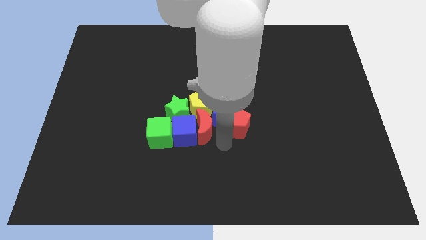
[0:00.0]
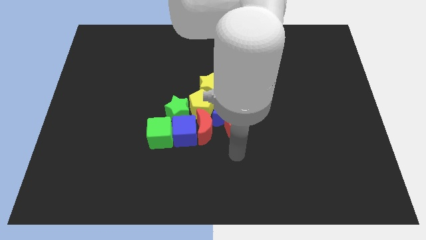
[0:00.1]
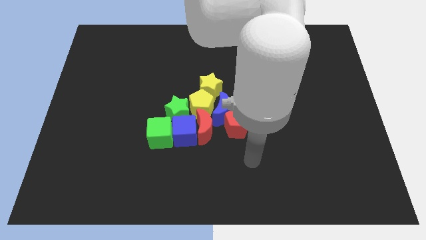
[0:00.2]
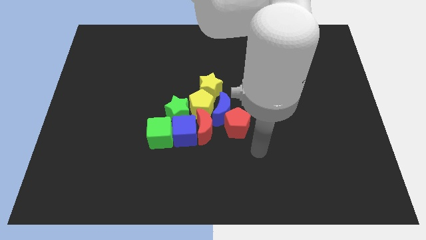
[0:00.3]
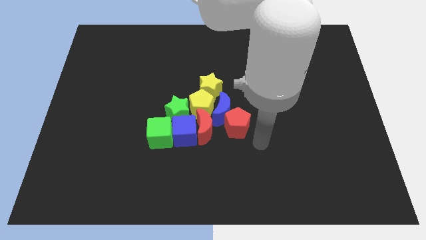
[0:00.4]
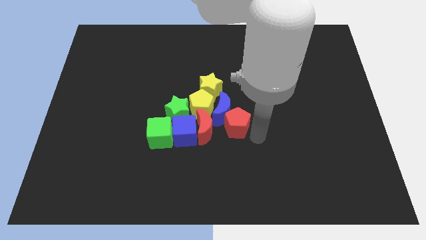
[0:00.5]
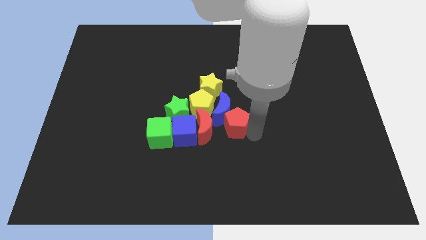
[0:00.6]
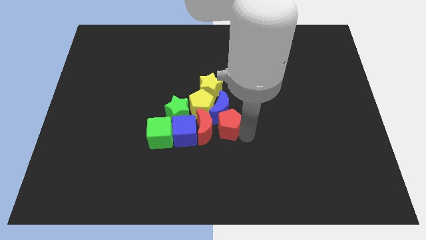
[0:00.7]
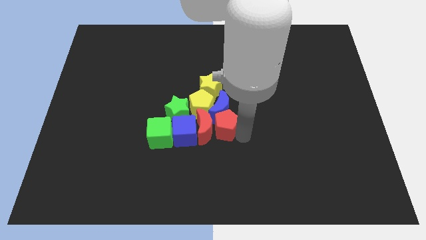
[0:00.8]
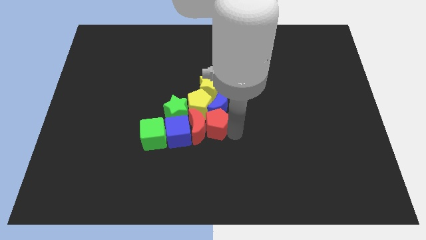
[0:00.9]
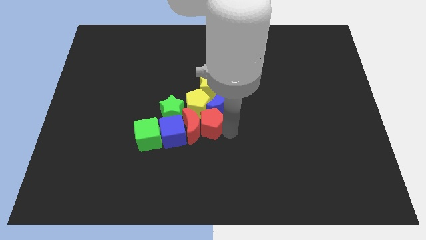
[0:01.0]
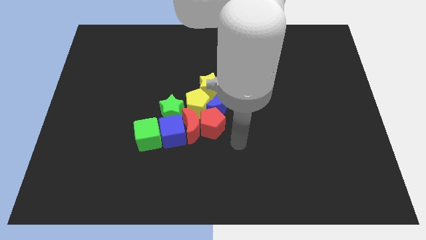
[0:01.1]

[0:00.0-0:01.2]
push the red pentagon into the red moon

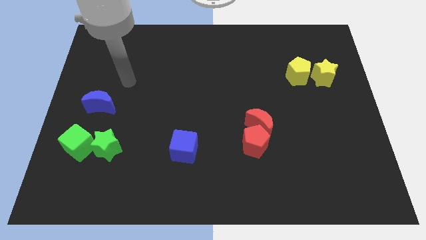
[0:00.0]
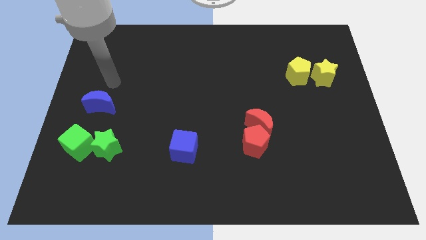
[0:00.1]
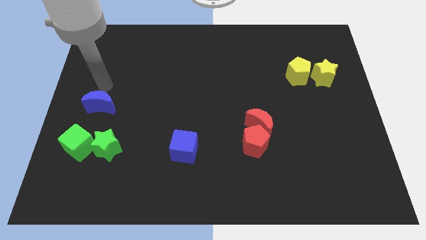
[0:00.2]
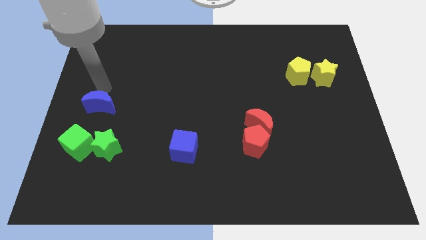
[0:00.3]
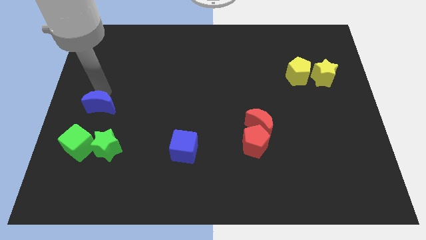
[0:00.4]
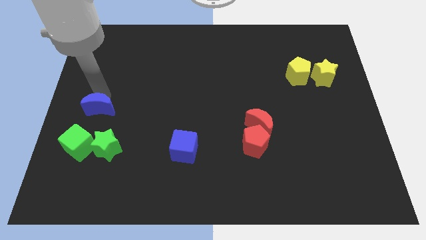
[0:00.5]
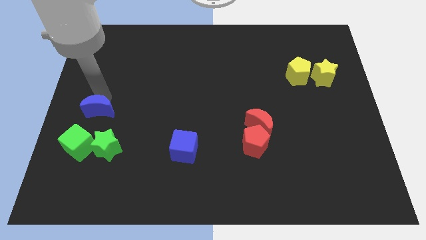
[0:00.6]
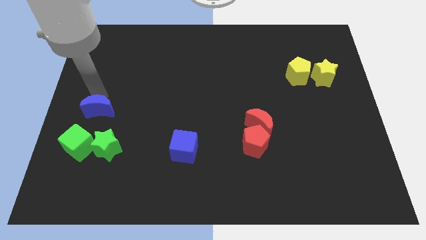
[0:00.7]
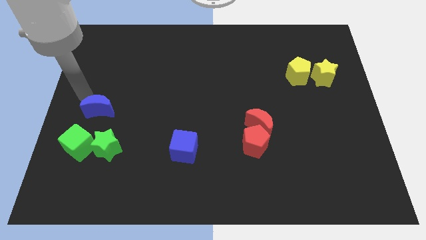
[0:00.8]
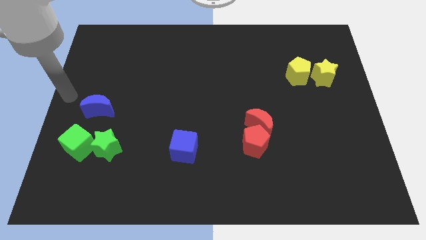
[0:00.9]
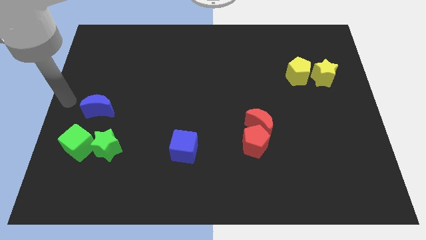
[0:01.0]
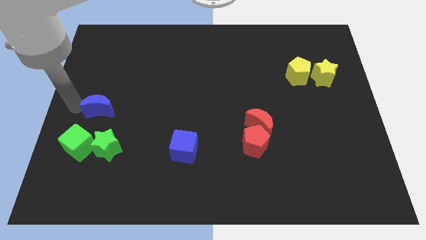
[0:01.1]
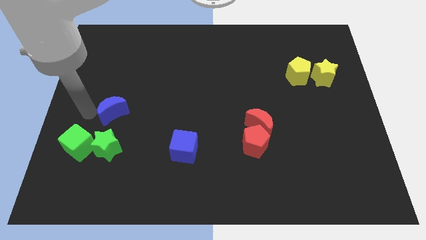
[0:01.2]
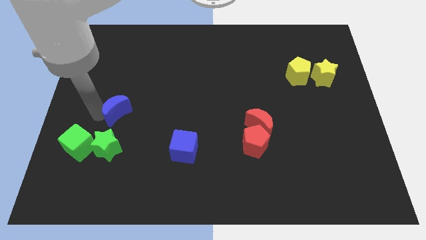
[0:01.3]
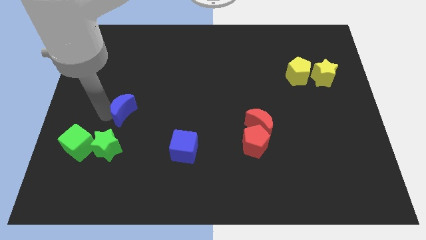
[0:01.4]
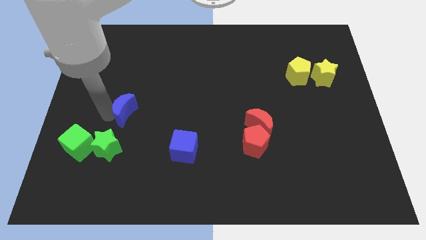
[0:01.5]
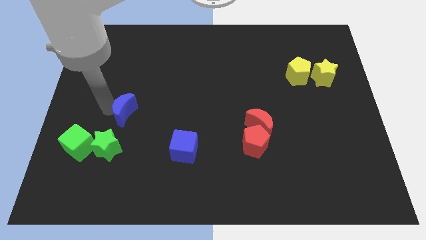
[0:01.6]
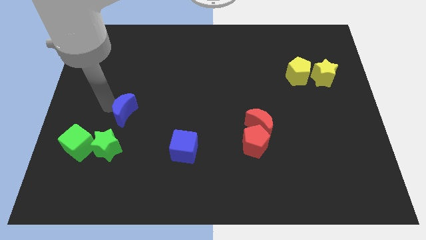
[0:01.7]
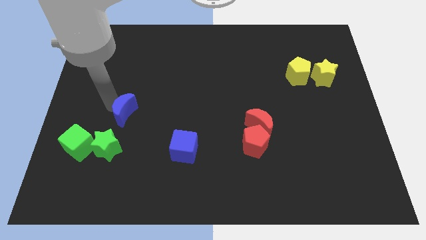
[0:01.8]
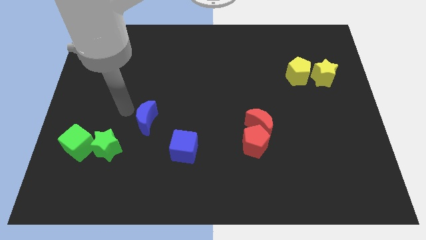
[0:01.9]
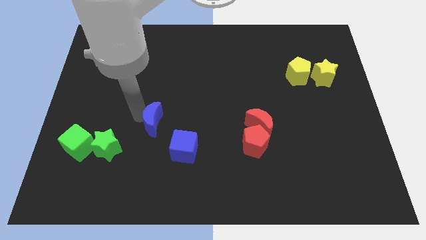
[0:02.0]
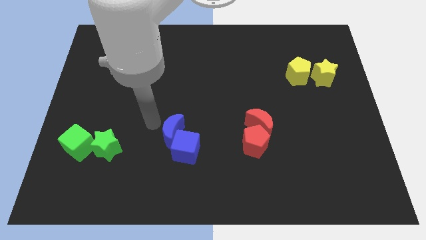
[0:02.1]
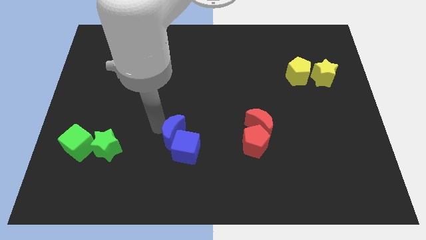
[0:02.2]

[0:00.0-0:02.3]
push blue crescent into blue cube

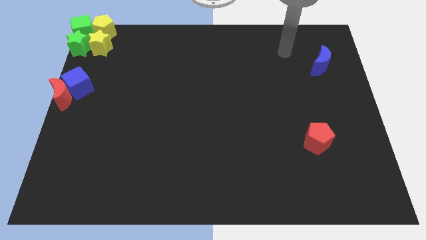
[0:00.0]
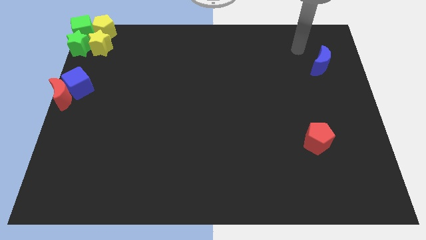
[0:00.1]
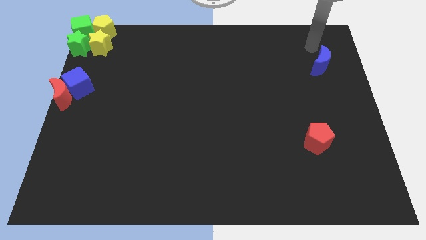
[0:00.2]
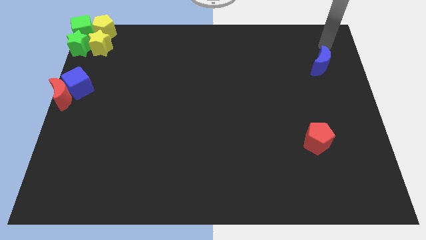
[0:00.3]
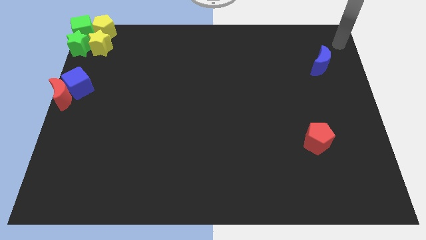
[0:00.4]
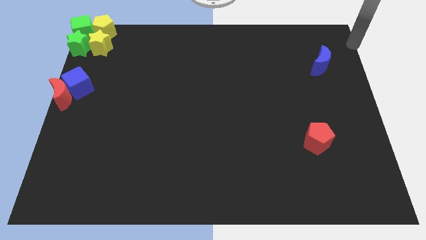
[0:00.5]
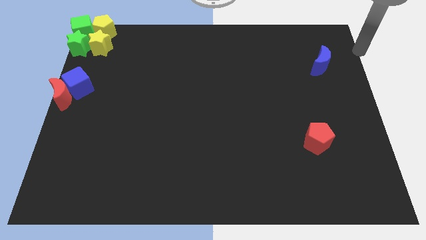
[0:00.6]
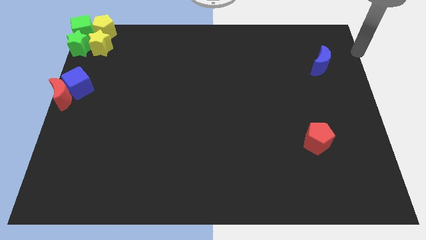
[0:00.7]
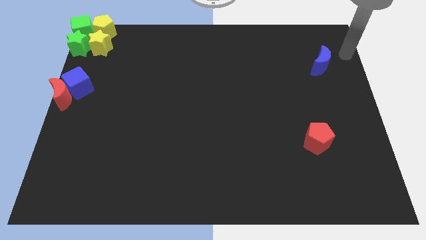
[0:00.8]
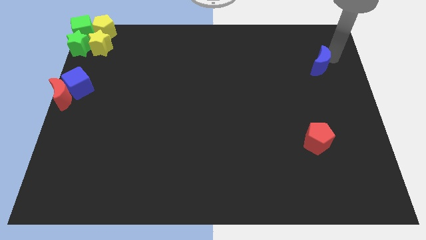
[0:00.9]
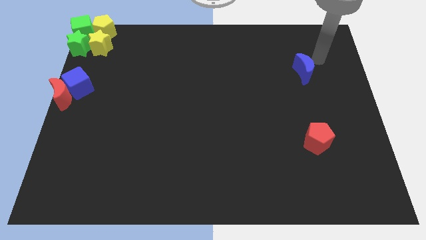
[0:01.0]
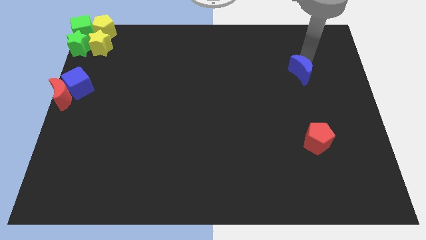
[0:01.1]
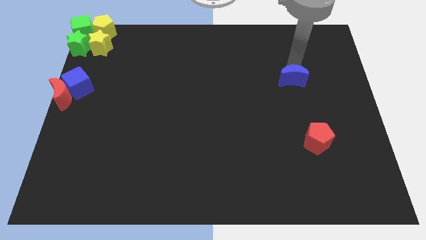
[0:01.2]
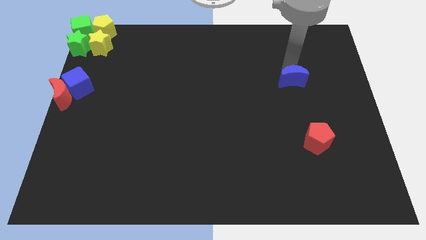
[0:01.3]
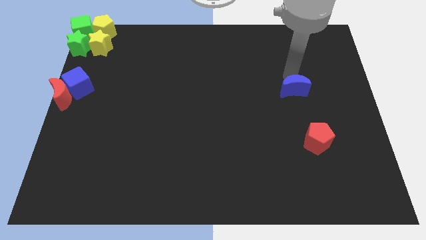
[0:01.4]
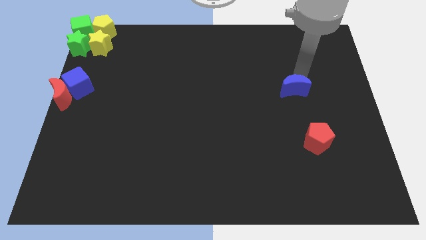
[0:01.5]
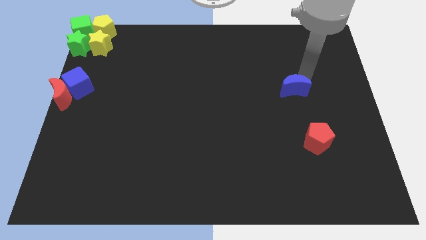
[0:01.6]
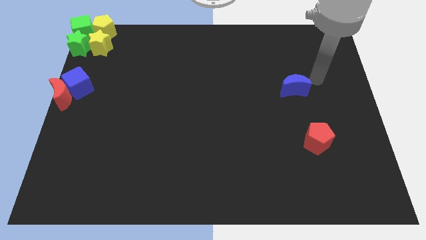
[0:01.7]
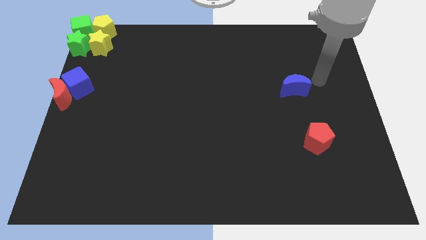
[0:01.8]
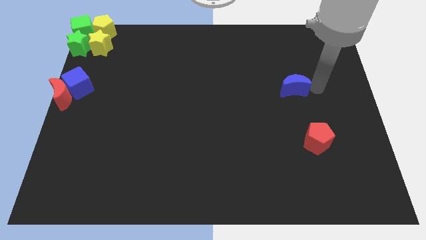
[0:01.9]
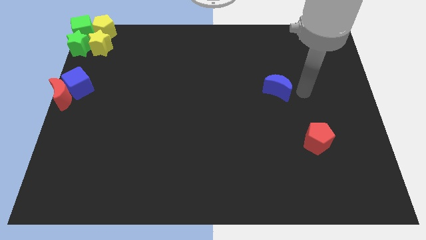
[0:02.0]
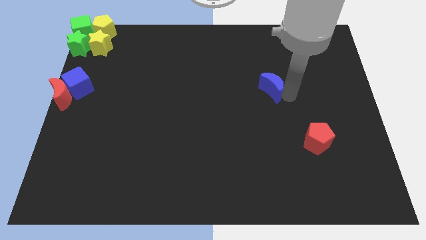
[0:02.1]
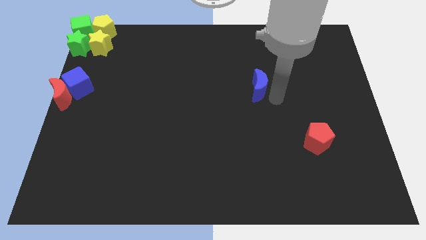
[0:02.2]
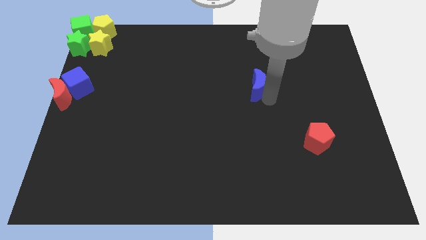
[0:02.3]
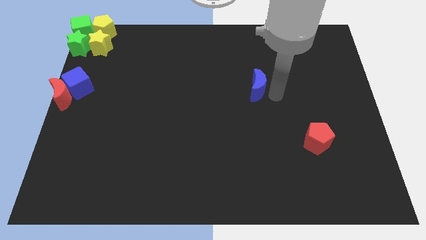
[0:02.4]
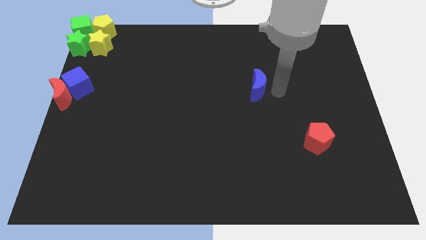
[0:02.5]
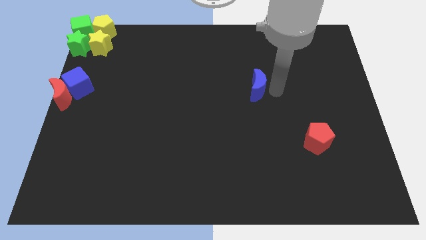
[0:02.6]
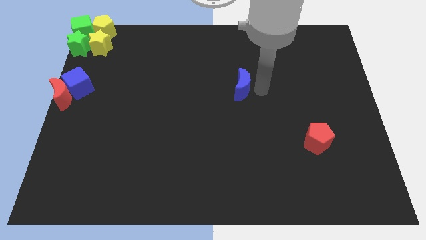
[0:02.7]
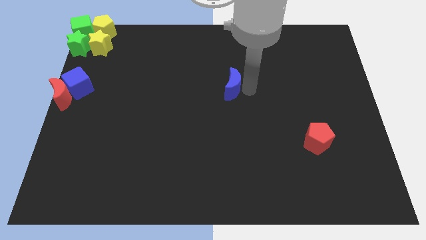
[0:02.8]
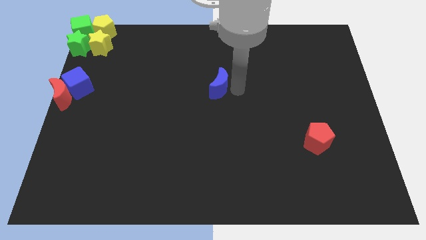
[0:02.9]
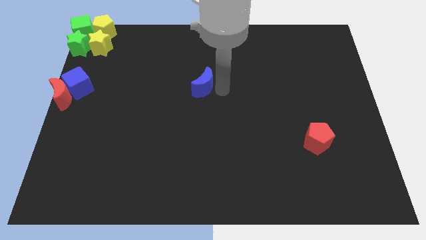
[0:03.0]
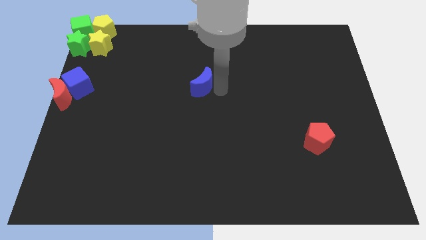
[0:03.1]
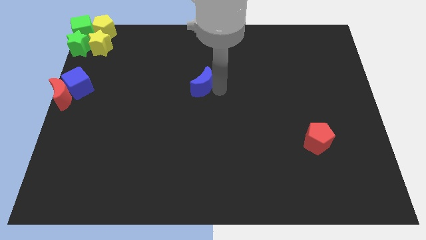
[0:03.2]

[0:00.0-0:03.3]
move blue crescent to the top center of the board

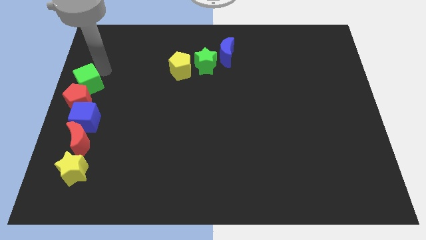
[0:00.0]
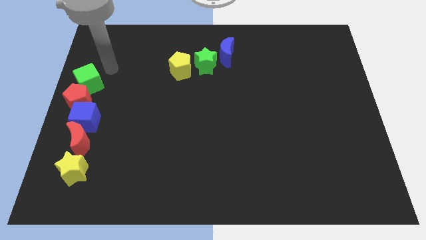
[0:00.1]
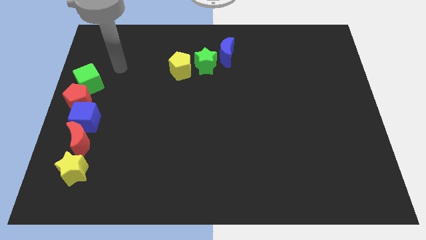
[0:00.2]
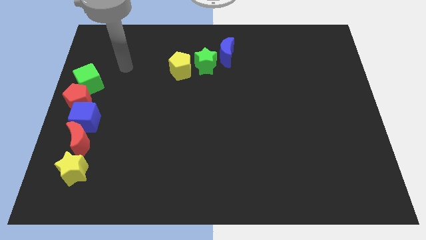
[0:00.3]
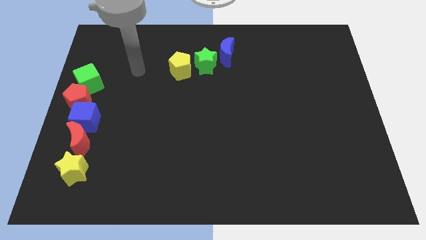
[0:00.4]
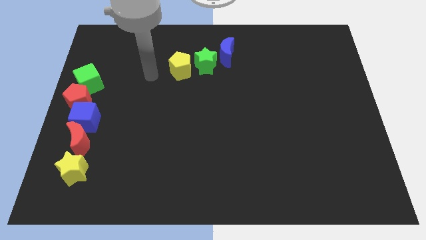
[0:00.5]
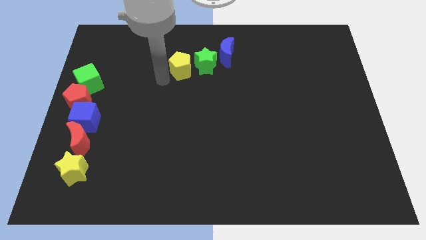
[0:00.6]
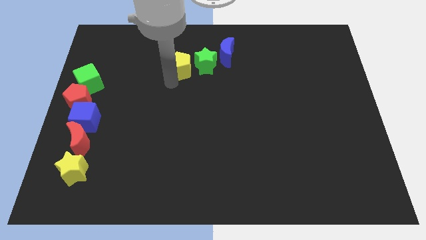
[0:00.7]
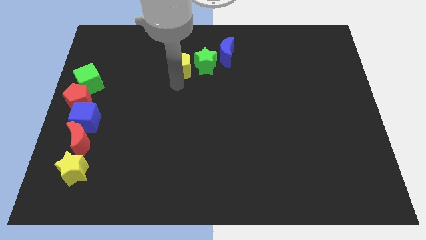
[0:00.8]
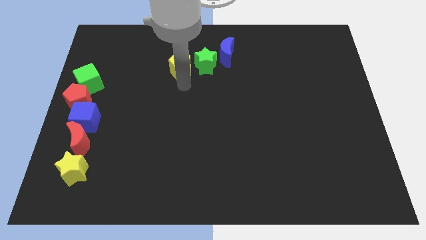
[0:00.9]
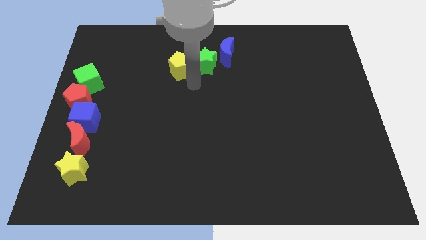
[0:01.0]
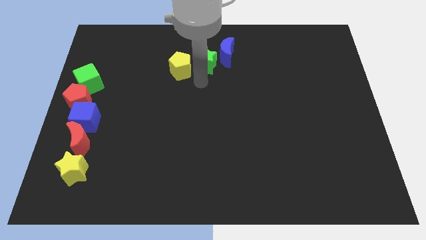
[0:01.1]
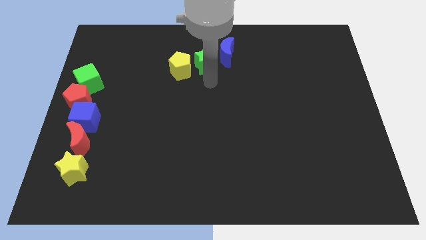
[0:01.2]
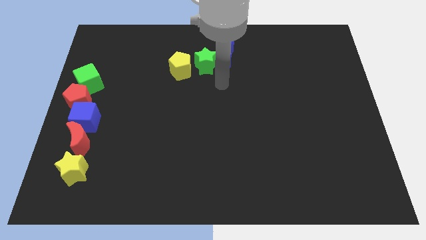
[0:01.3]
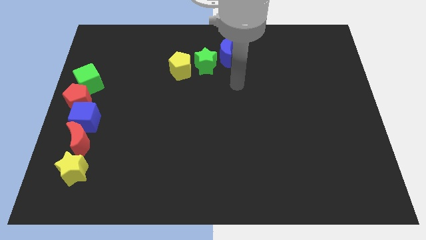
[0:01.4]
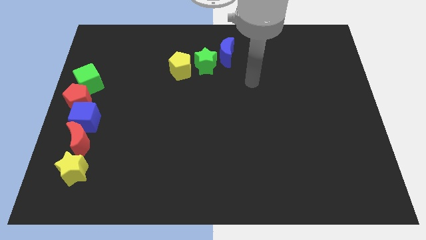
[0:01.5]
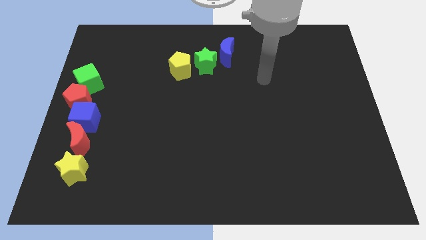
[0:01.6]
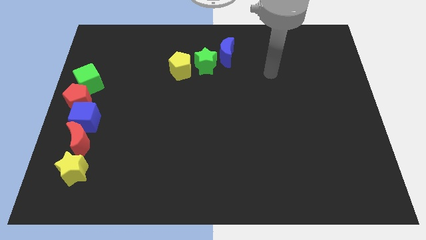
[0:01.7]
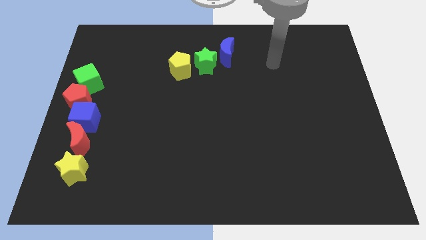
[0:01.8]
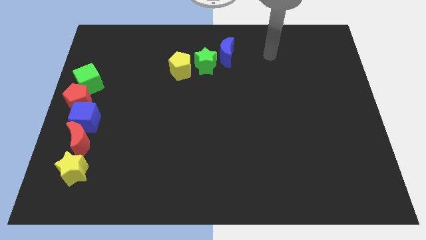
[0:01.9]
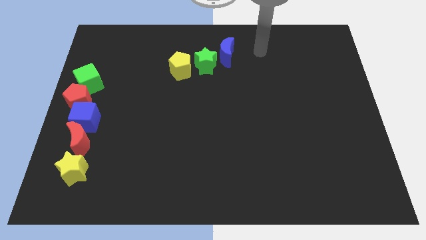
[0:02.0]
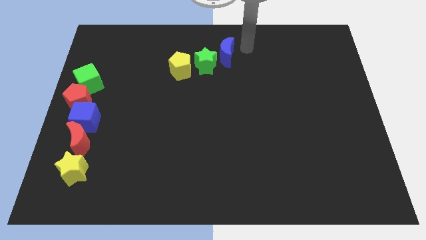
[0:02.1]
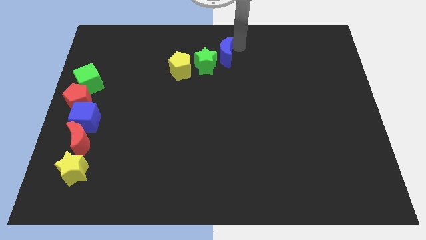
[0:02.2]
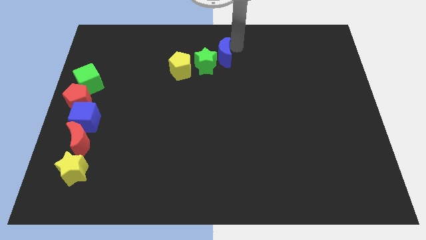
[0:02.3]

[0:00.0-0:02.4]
tap the blue crescent
